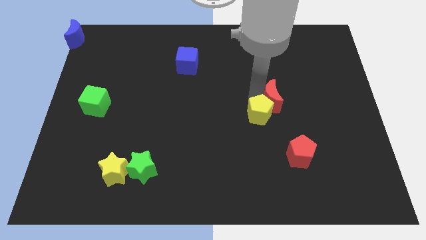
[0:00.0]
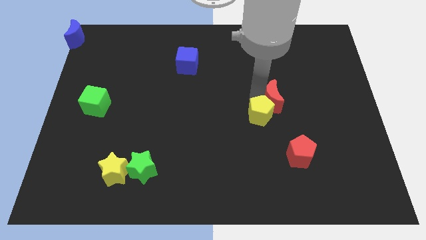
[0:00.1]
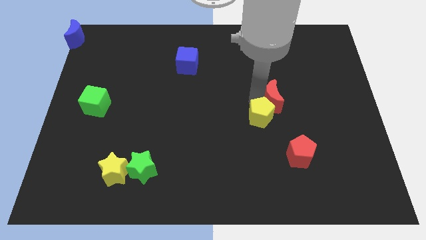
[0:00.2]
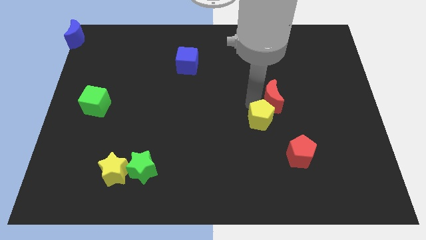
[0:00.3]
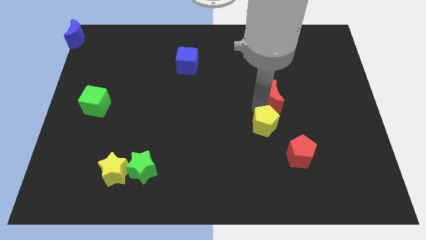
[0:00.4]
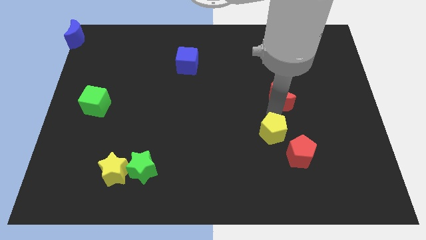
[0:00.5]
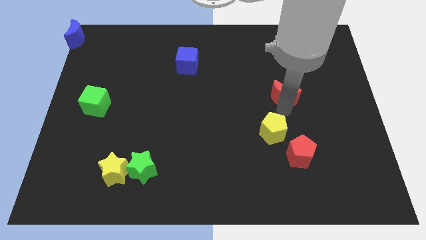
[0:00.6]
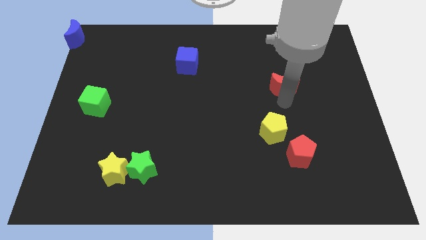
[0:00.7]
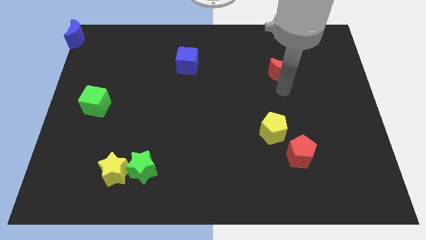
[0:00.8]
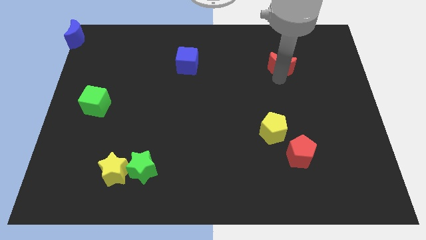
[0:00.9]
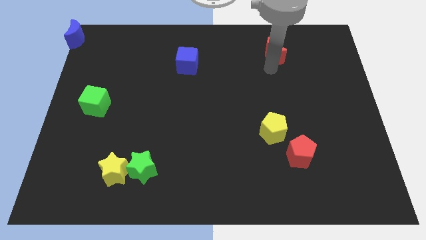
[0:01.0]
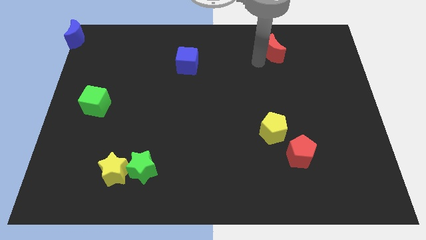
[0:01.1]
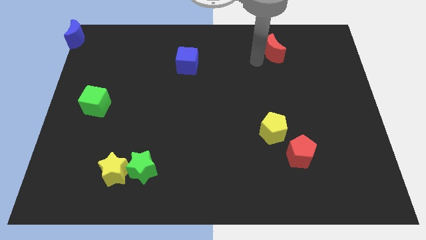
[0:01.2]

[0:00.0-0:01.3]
separate the red moon from the yellow pentagon

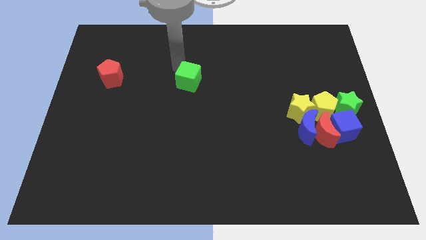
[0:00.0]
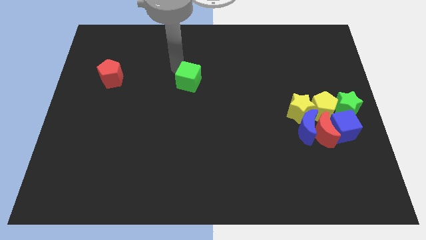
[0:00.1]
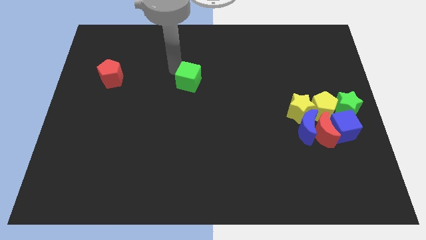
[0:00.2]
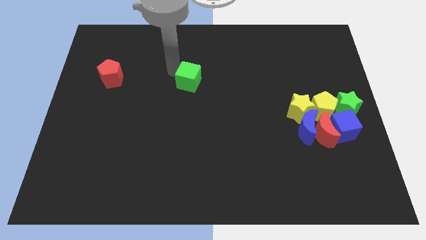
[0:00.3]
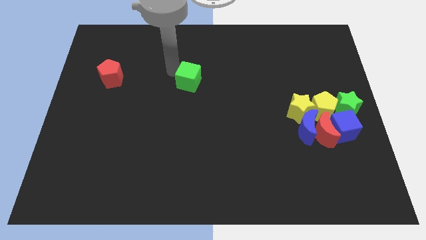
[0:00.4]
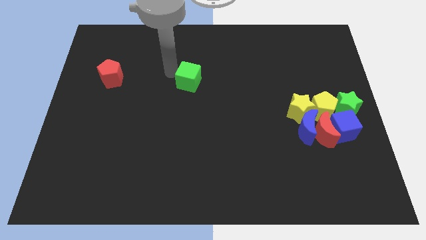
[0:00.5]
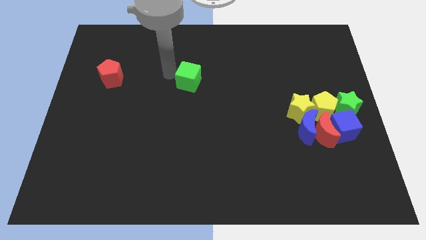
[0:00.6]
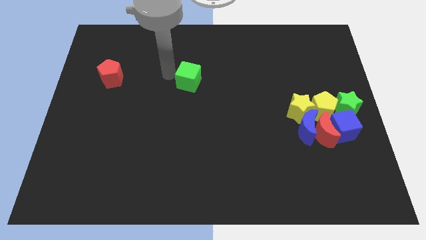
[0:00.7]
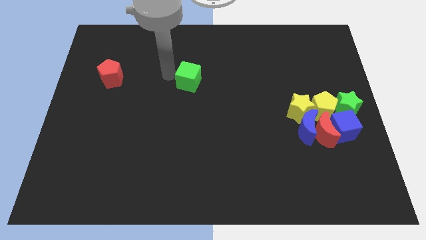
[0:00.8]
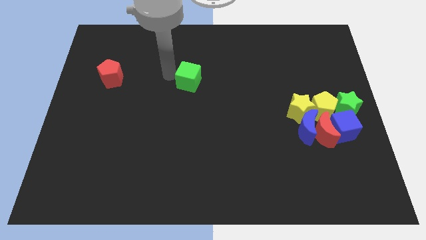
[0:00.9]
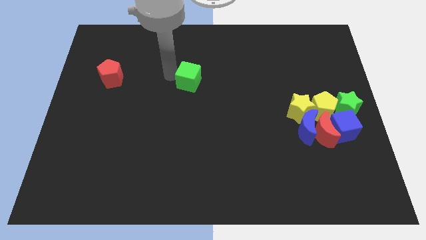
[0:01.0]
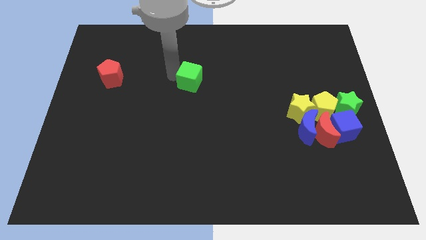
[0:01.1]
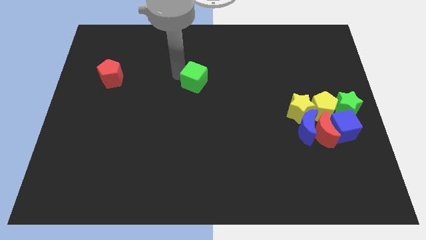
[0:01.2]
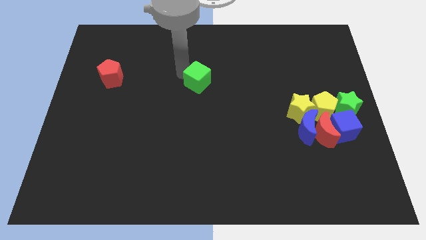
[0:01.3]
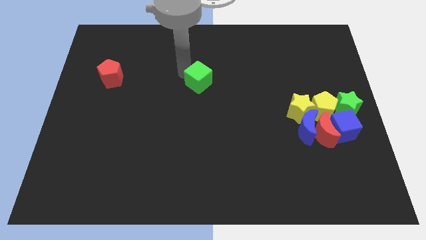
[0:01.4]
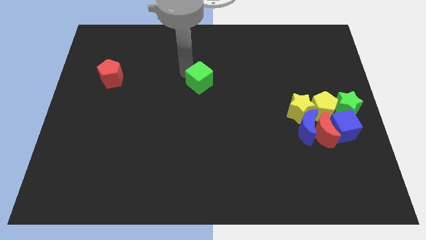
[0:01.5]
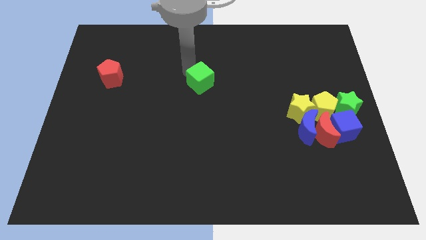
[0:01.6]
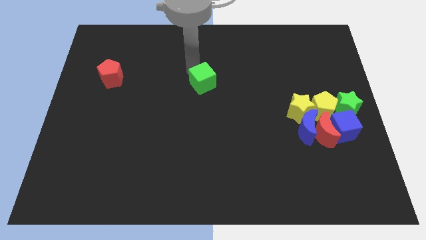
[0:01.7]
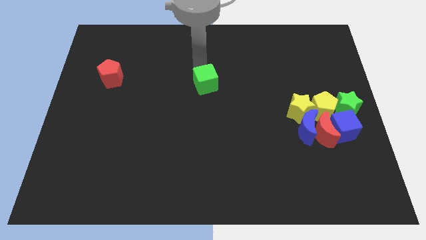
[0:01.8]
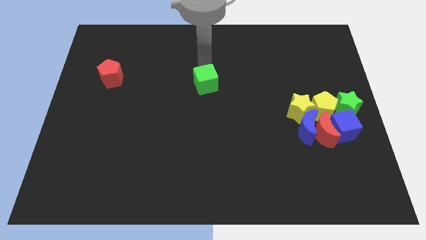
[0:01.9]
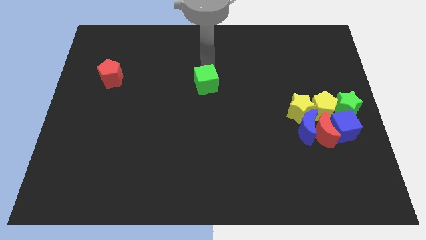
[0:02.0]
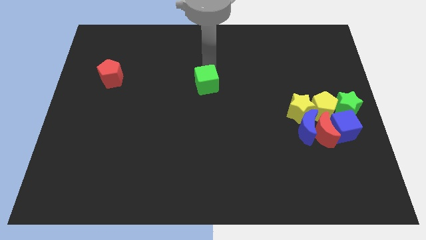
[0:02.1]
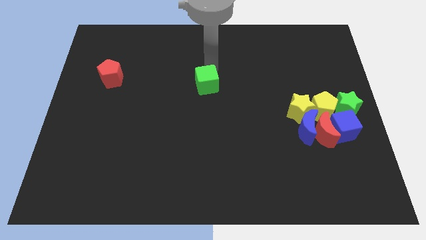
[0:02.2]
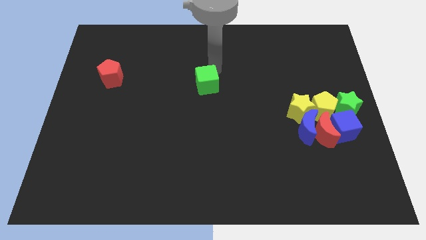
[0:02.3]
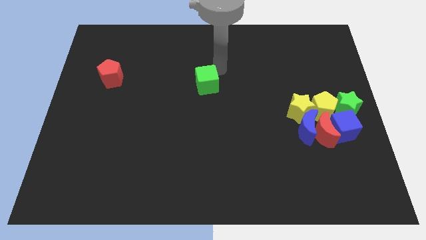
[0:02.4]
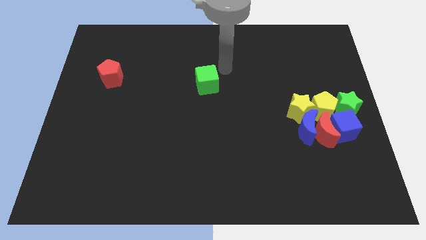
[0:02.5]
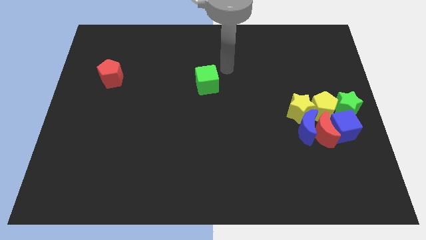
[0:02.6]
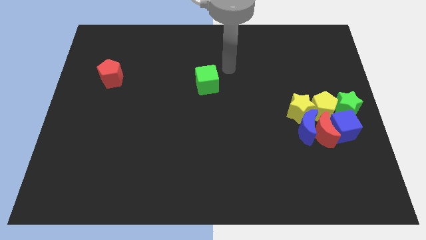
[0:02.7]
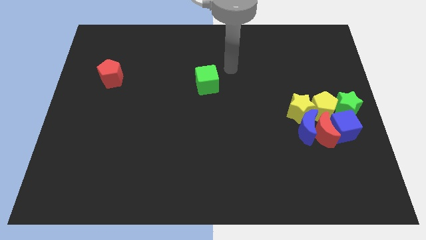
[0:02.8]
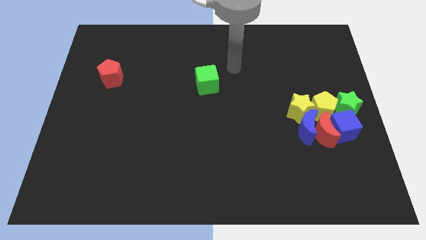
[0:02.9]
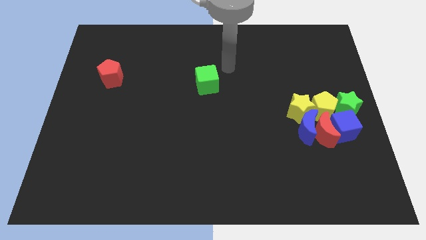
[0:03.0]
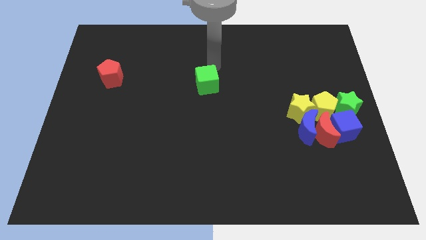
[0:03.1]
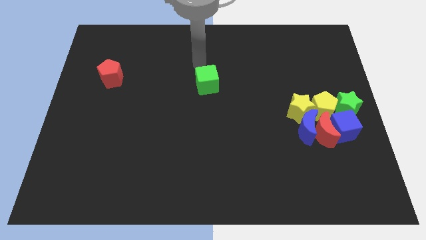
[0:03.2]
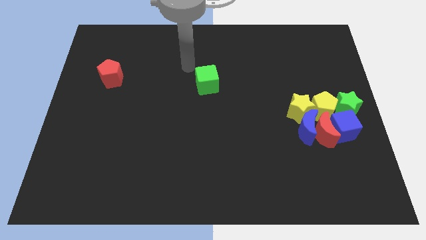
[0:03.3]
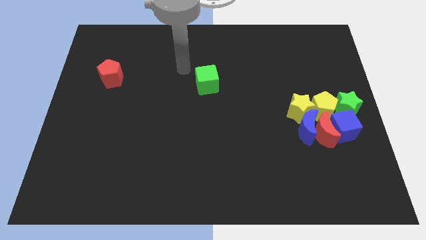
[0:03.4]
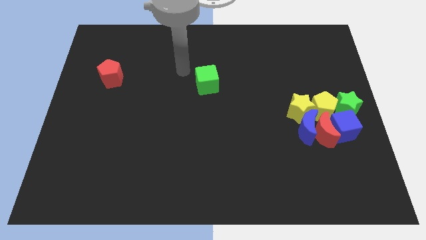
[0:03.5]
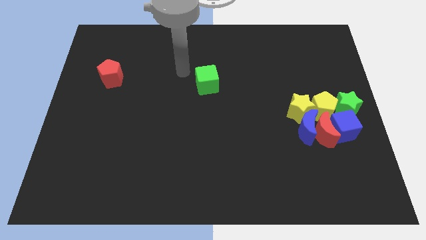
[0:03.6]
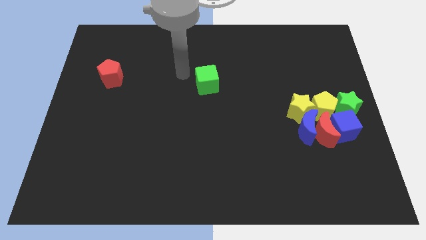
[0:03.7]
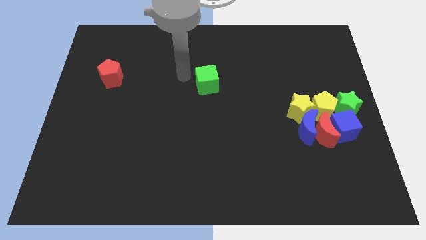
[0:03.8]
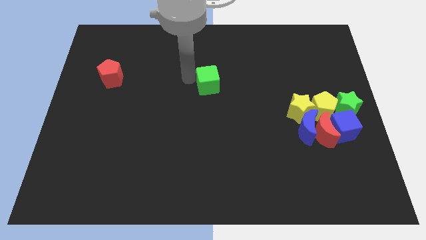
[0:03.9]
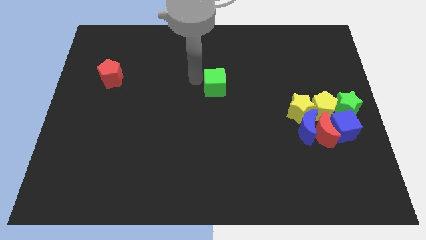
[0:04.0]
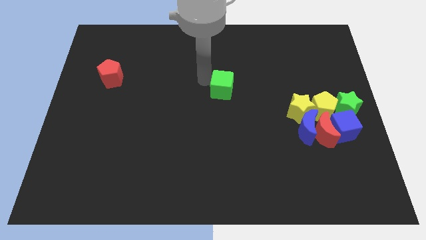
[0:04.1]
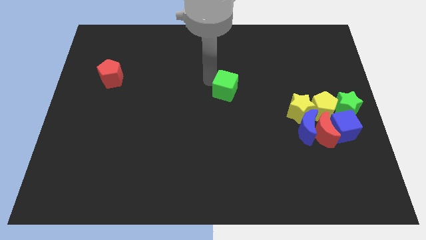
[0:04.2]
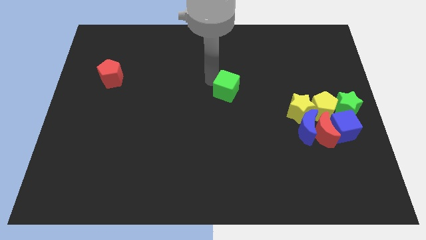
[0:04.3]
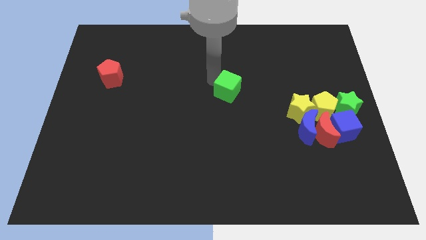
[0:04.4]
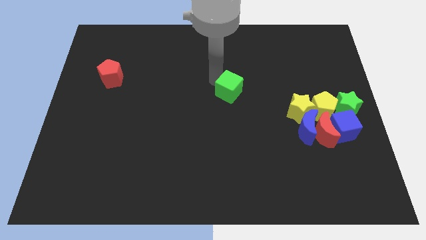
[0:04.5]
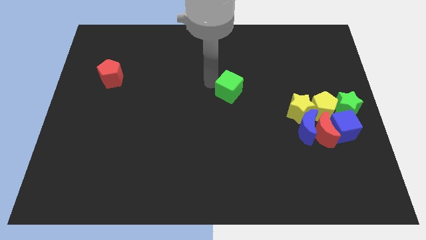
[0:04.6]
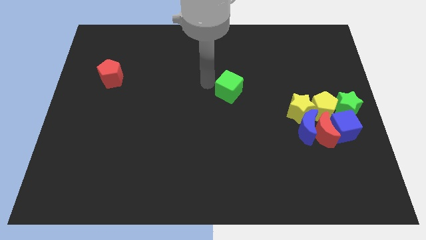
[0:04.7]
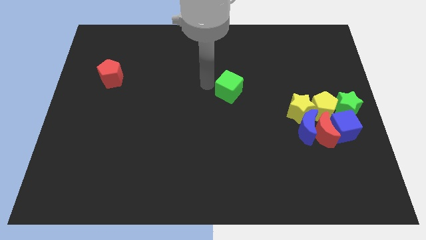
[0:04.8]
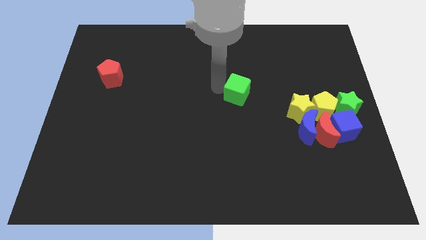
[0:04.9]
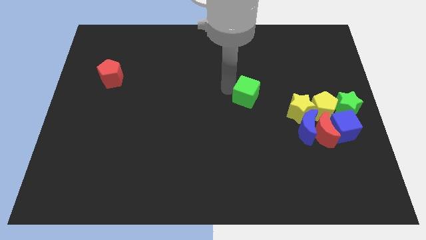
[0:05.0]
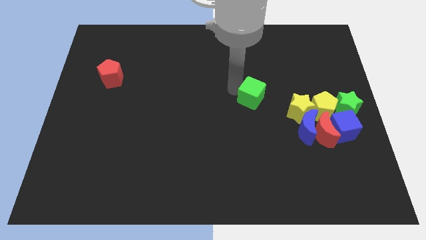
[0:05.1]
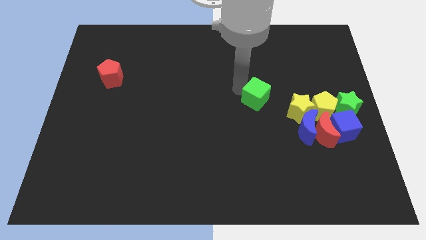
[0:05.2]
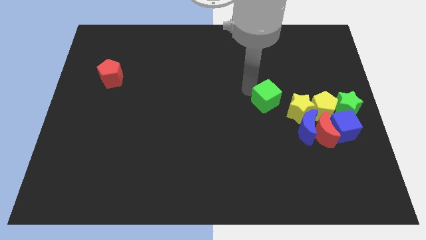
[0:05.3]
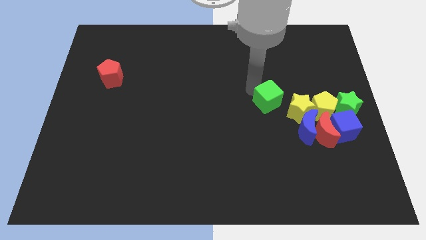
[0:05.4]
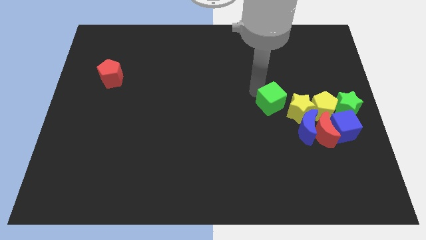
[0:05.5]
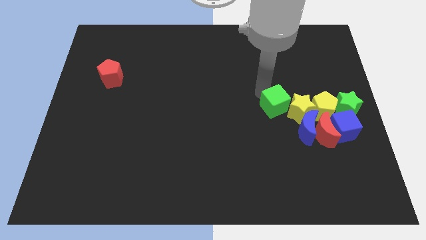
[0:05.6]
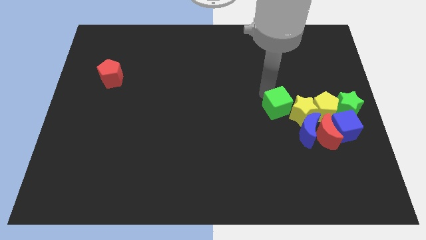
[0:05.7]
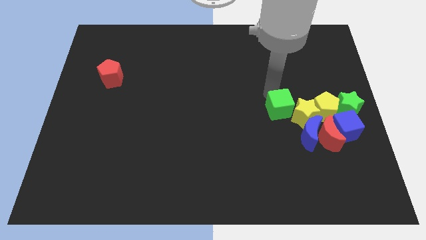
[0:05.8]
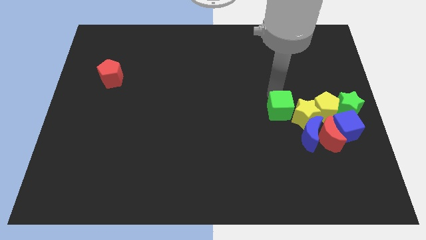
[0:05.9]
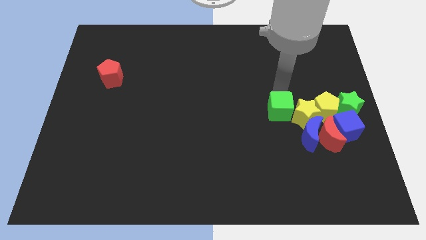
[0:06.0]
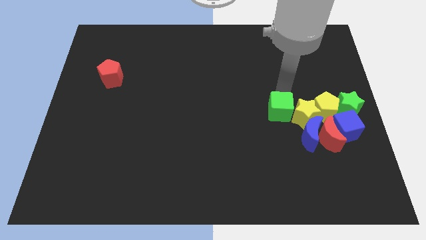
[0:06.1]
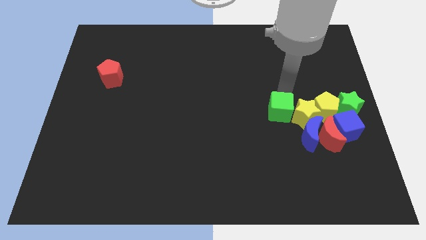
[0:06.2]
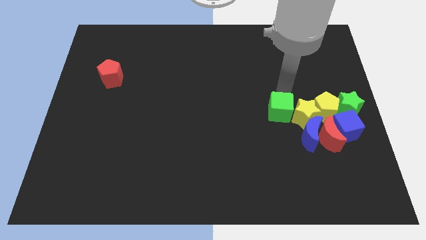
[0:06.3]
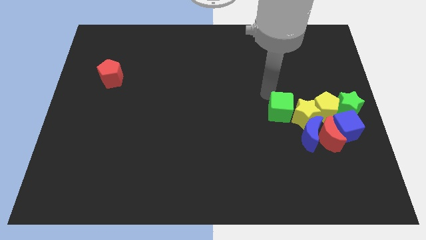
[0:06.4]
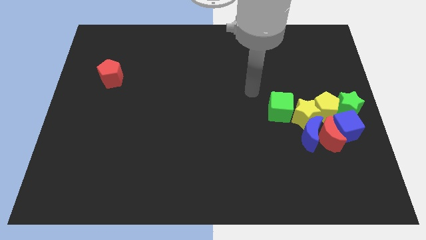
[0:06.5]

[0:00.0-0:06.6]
move the green cube into the left side of the yellow star

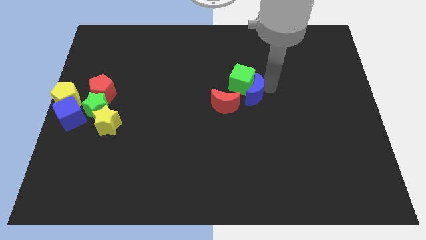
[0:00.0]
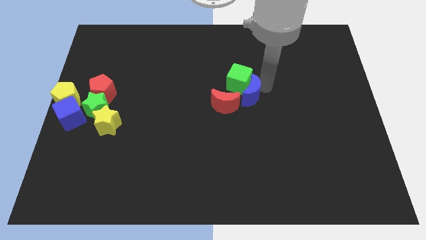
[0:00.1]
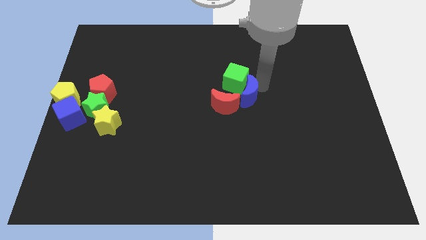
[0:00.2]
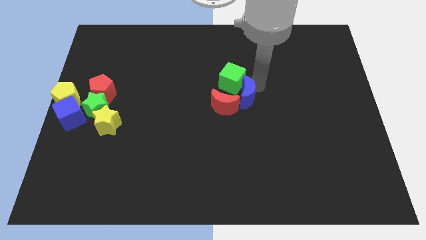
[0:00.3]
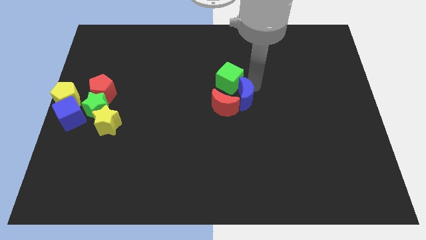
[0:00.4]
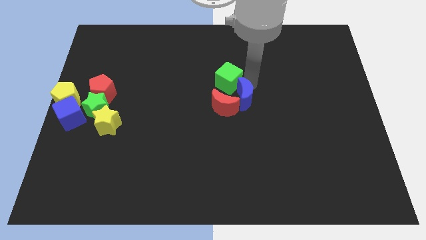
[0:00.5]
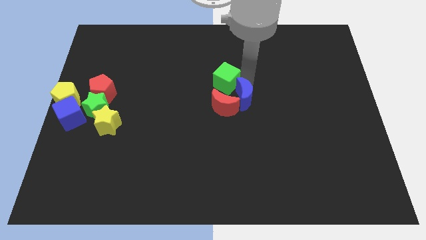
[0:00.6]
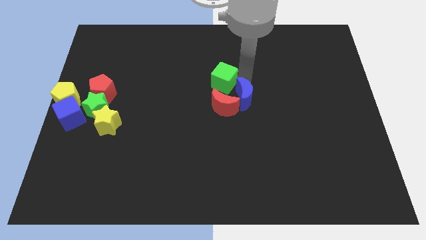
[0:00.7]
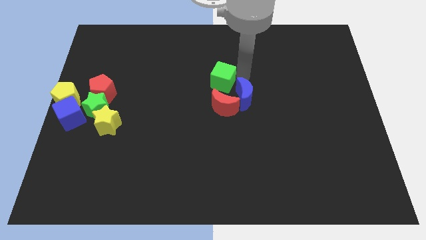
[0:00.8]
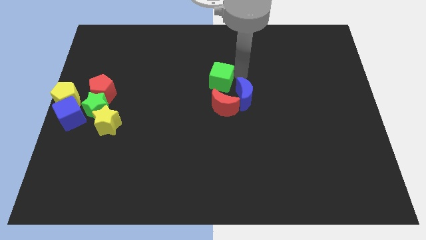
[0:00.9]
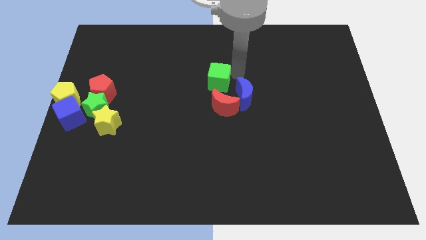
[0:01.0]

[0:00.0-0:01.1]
separate the green cube and blue crescent apart
